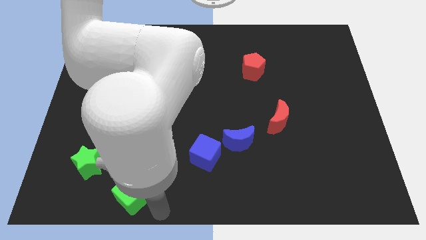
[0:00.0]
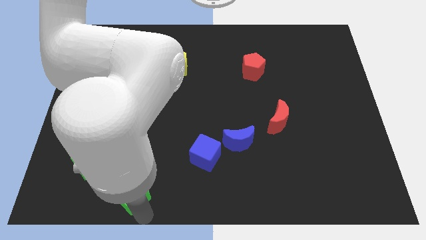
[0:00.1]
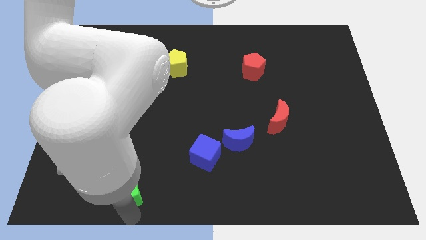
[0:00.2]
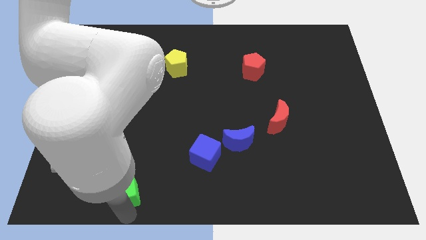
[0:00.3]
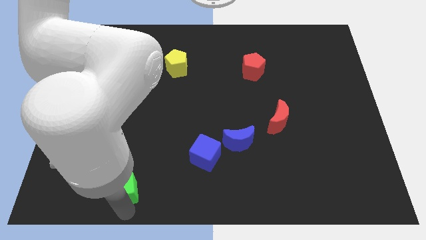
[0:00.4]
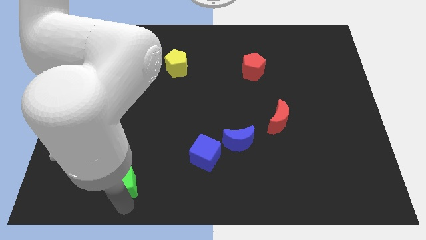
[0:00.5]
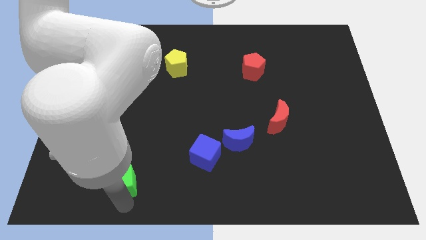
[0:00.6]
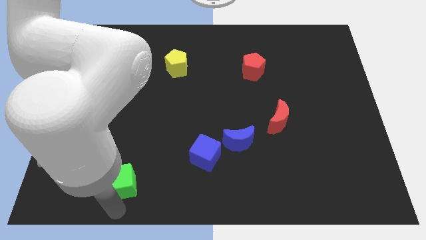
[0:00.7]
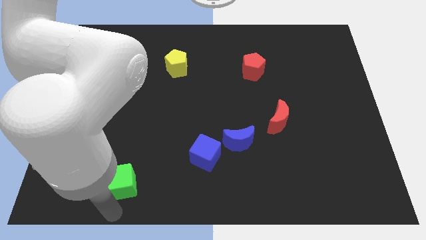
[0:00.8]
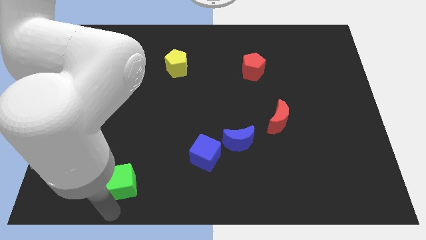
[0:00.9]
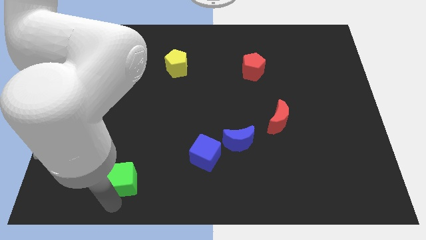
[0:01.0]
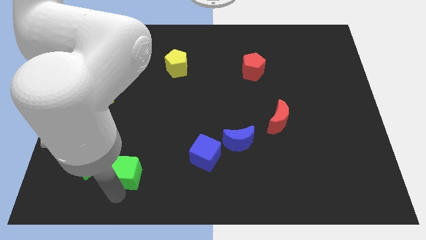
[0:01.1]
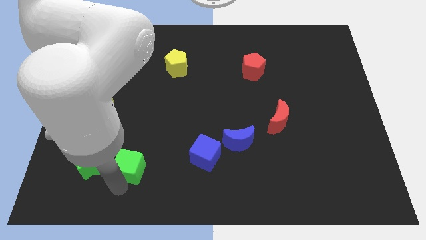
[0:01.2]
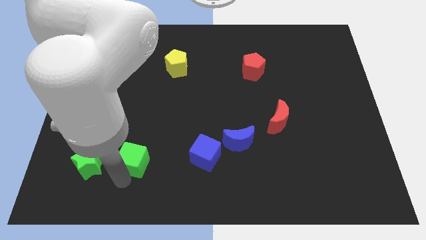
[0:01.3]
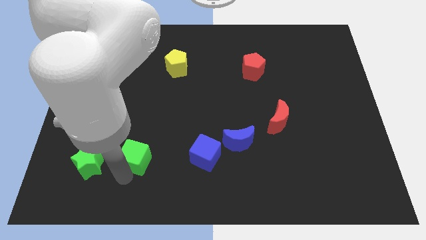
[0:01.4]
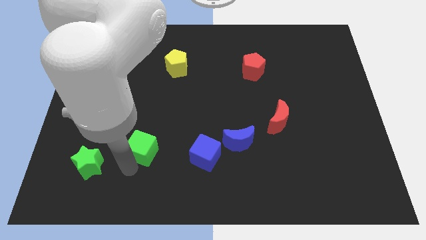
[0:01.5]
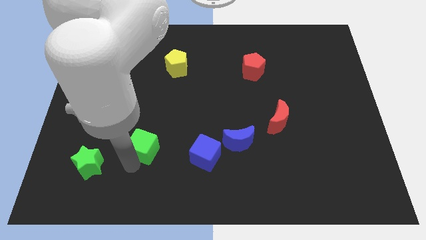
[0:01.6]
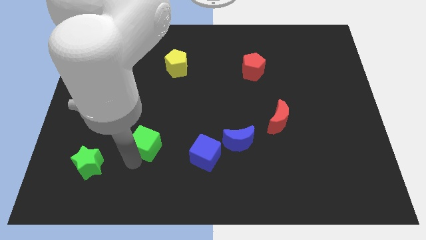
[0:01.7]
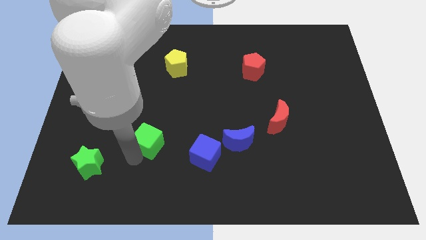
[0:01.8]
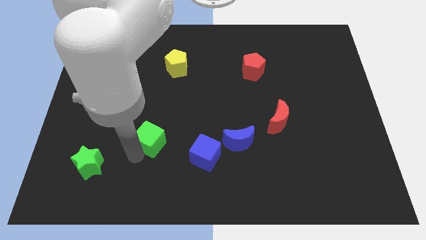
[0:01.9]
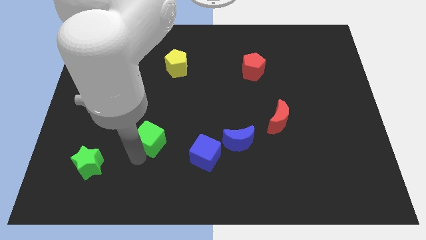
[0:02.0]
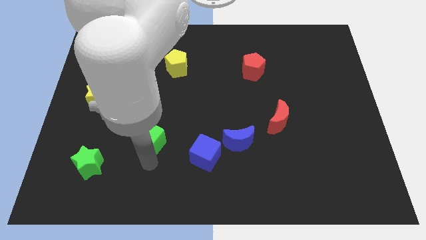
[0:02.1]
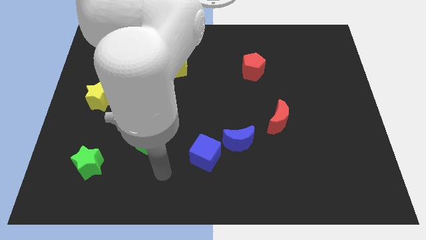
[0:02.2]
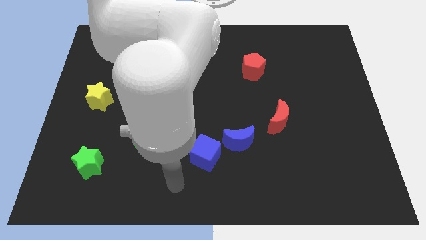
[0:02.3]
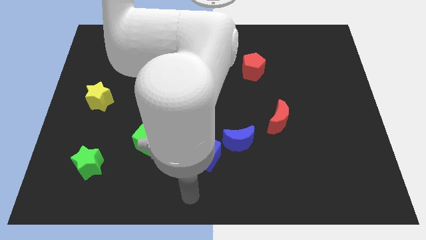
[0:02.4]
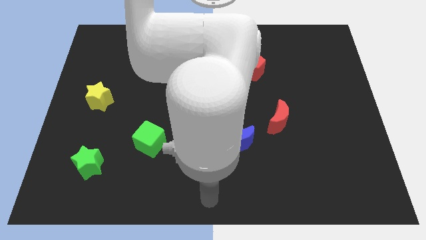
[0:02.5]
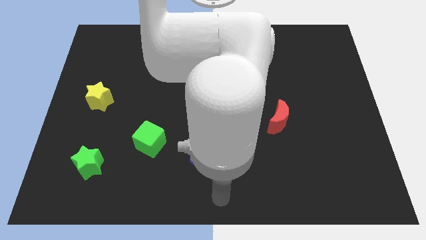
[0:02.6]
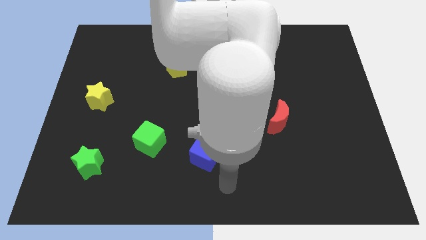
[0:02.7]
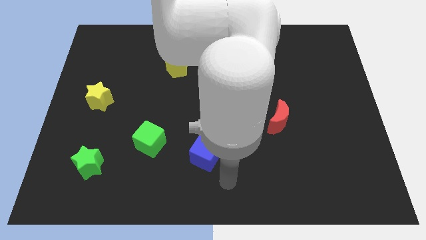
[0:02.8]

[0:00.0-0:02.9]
move the green cube diagonally bottom right to the yellow star

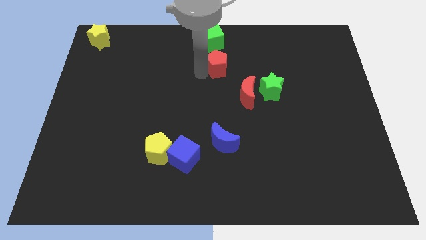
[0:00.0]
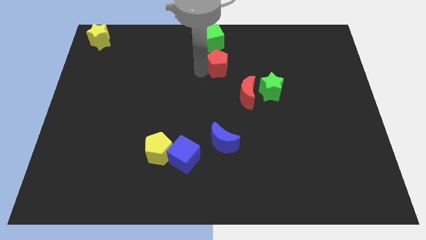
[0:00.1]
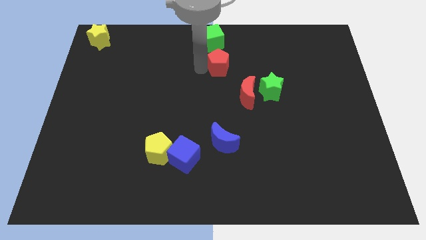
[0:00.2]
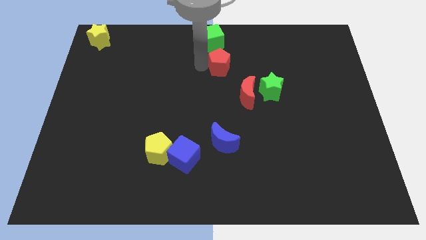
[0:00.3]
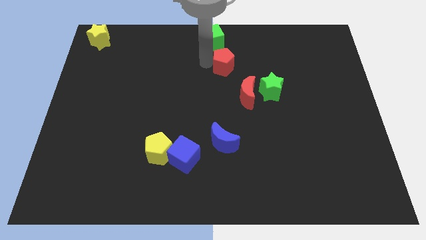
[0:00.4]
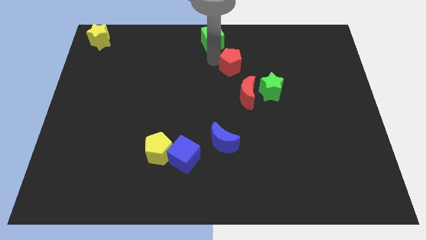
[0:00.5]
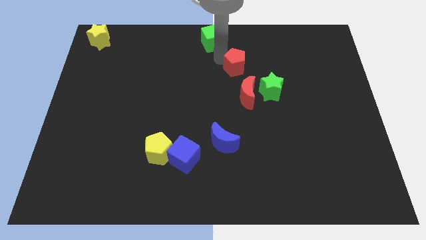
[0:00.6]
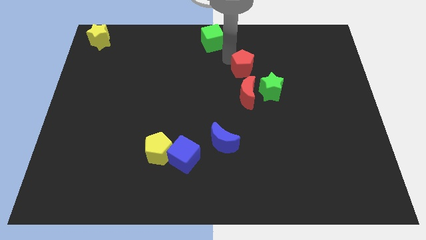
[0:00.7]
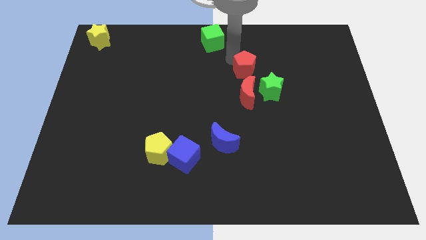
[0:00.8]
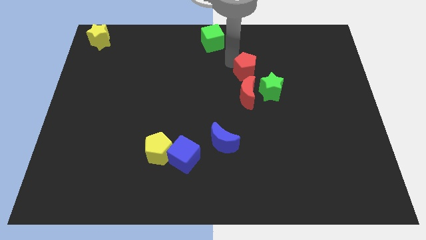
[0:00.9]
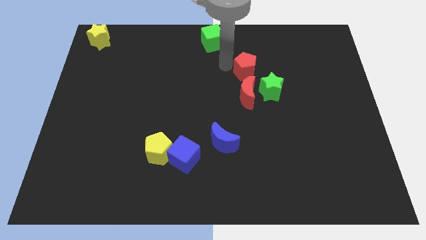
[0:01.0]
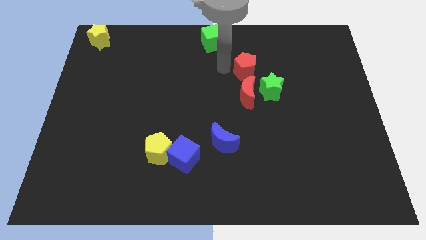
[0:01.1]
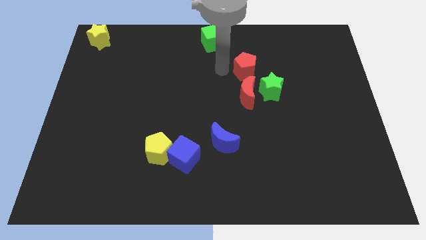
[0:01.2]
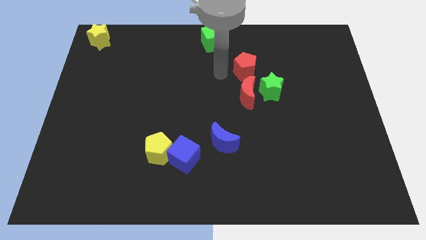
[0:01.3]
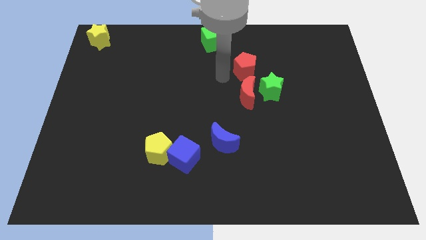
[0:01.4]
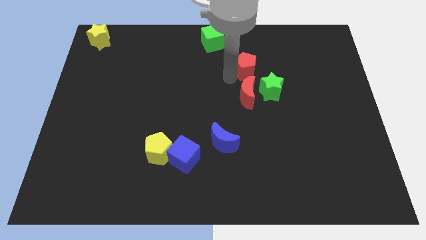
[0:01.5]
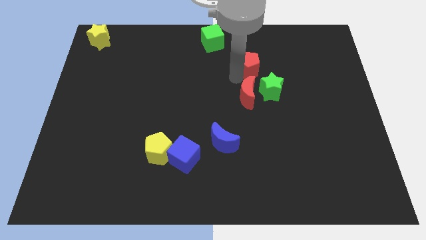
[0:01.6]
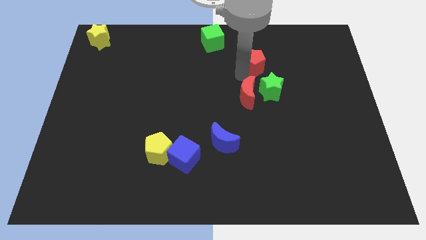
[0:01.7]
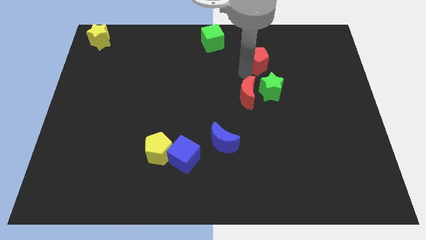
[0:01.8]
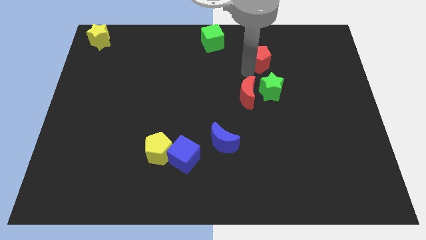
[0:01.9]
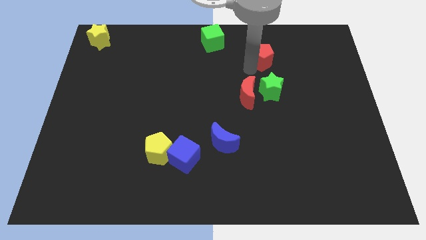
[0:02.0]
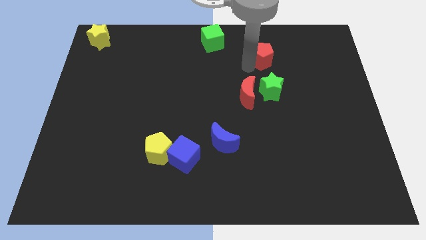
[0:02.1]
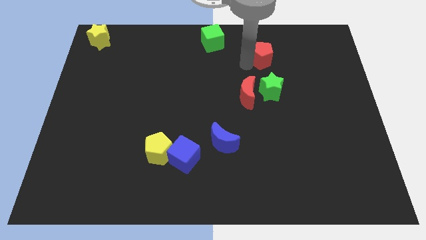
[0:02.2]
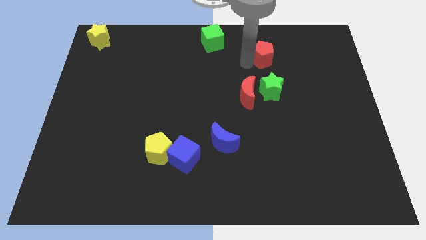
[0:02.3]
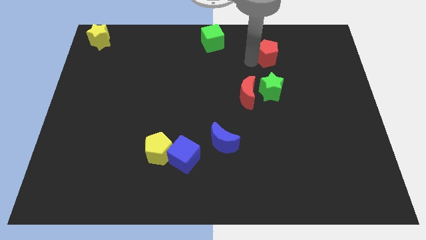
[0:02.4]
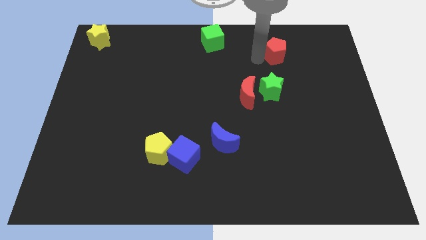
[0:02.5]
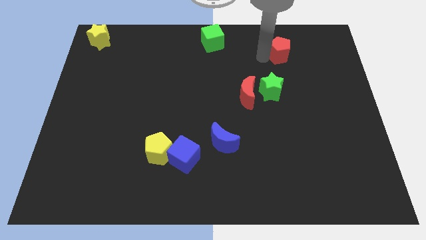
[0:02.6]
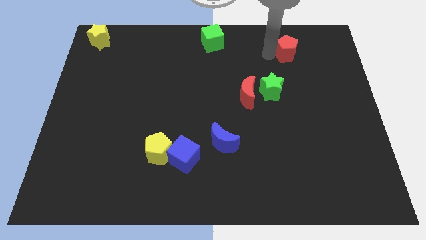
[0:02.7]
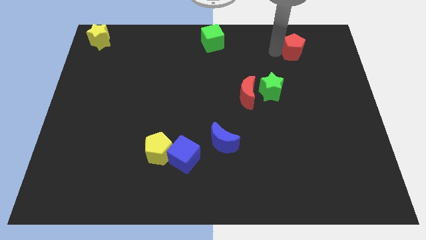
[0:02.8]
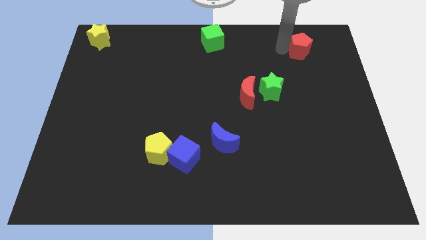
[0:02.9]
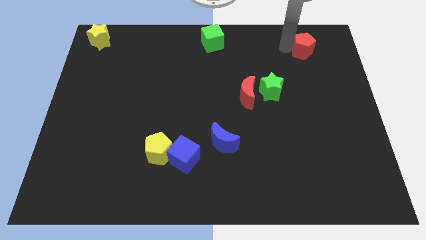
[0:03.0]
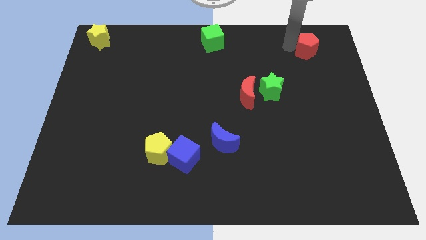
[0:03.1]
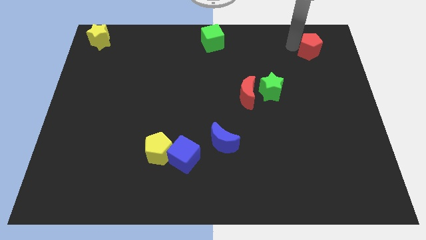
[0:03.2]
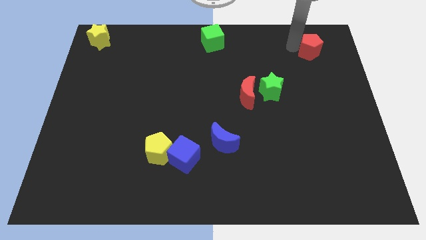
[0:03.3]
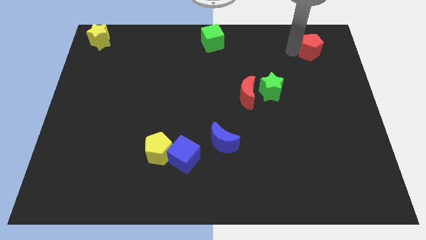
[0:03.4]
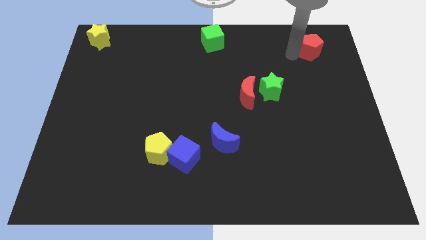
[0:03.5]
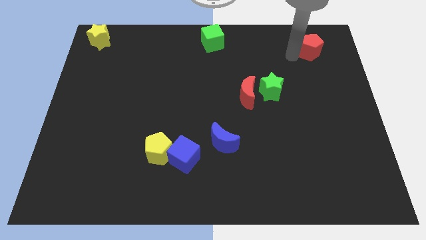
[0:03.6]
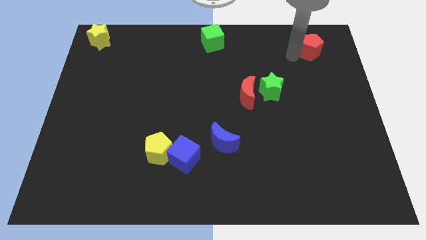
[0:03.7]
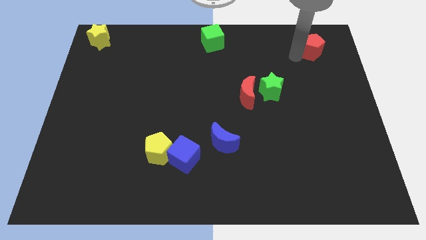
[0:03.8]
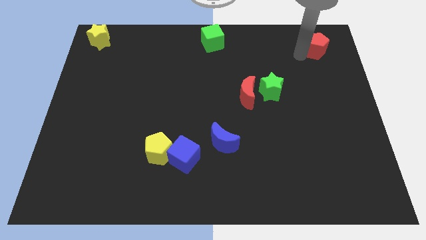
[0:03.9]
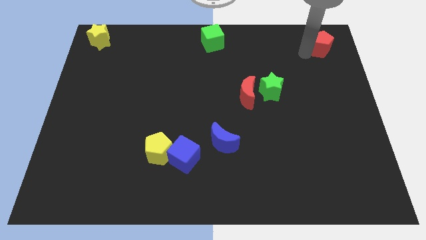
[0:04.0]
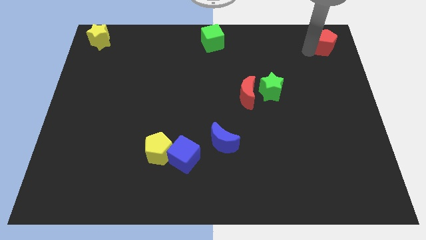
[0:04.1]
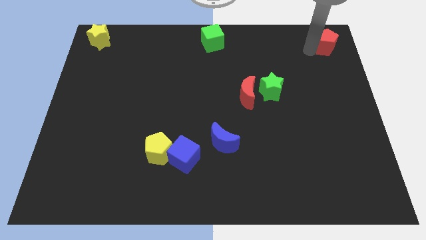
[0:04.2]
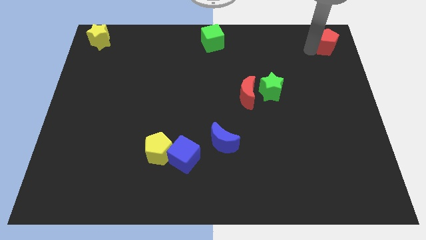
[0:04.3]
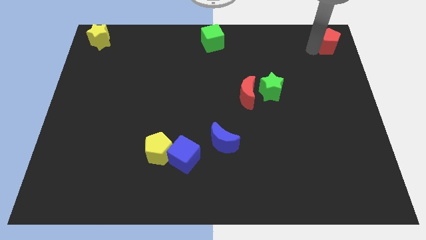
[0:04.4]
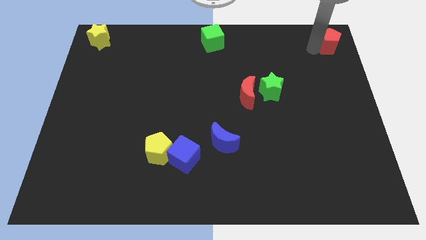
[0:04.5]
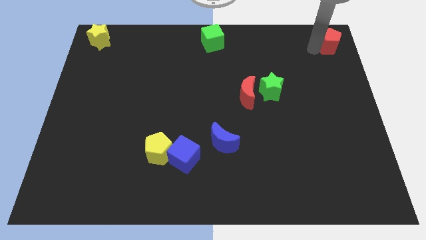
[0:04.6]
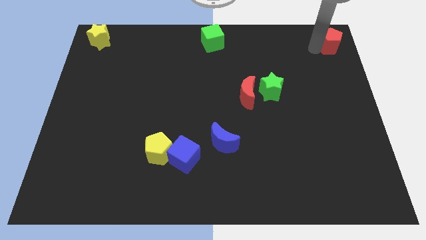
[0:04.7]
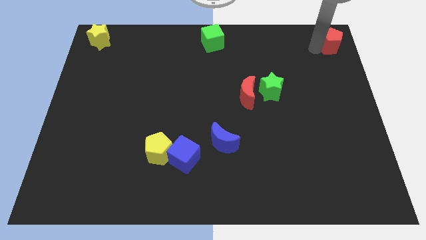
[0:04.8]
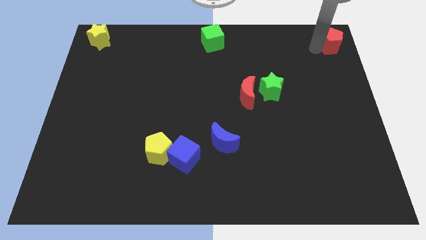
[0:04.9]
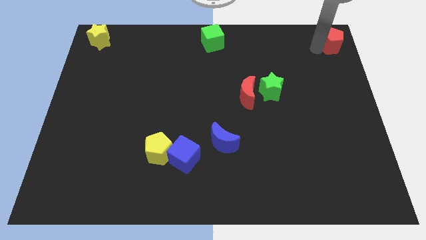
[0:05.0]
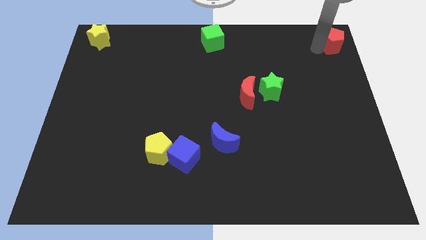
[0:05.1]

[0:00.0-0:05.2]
push the red pentagon to the top right corner of the board

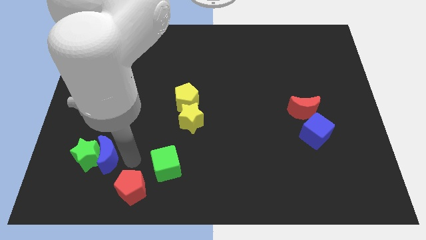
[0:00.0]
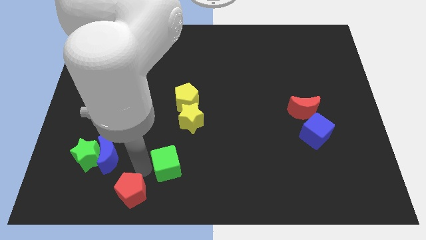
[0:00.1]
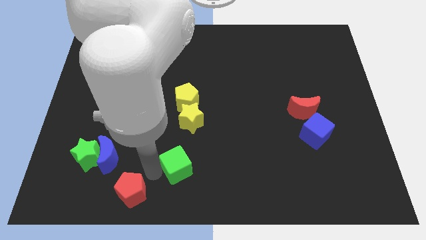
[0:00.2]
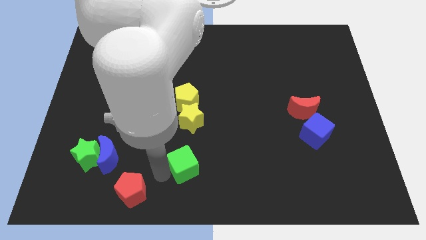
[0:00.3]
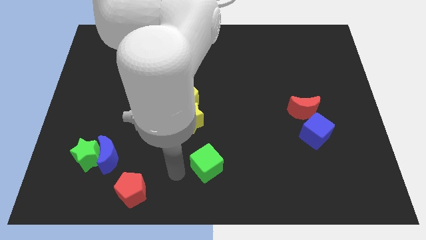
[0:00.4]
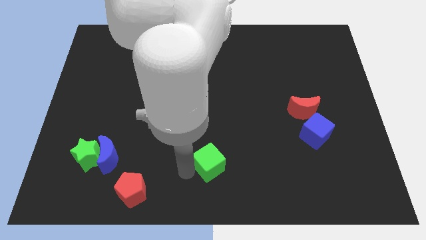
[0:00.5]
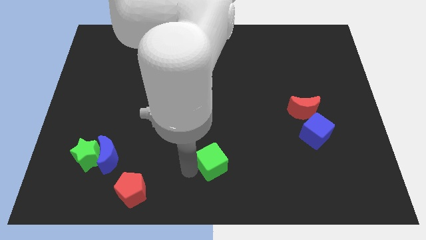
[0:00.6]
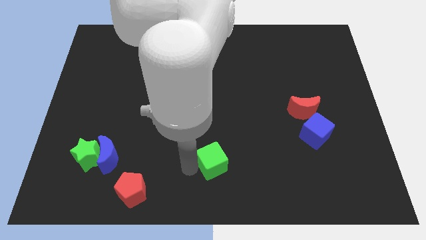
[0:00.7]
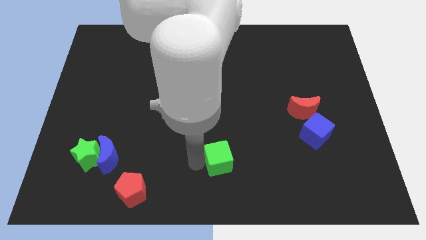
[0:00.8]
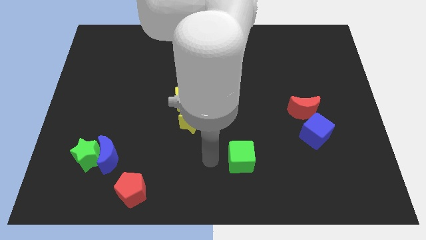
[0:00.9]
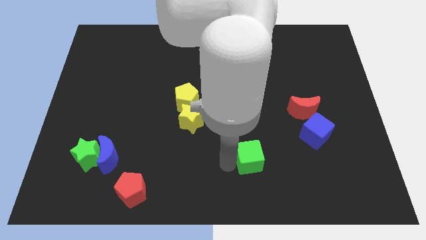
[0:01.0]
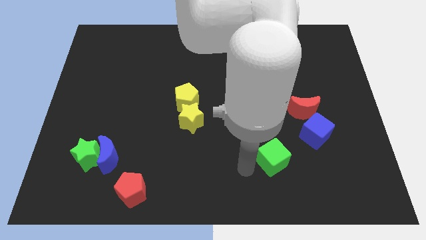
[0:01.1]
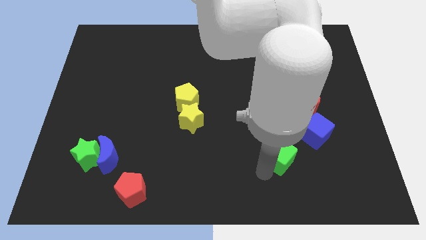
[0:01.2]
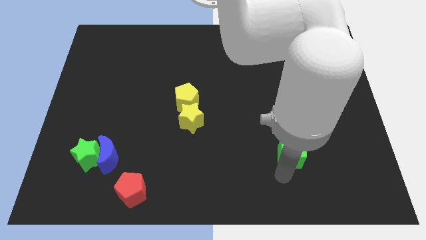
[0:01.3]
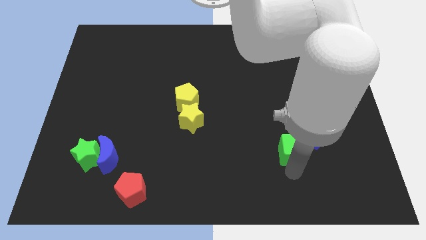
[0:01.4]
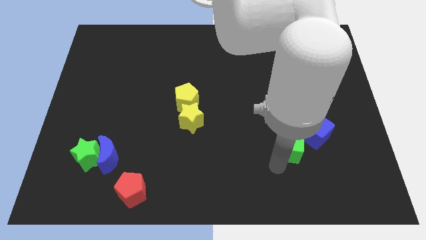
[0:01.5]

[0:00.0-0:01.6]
place the green cube diagonal to the blue cube
